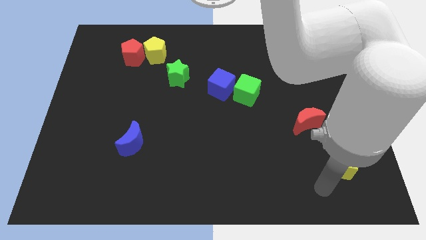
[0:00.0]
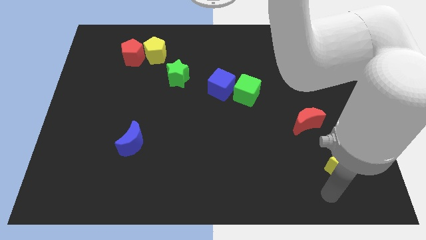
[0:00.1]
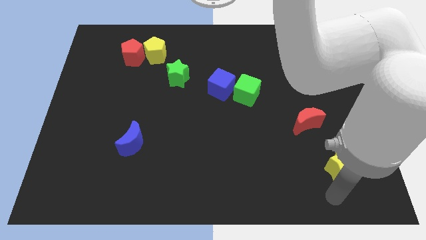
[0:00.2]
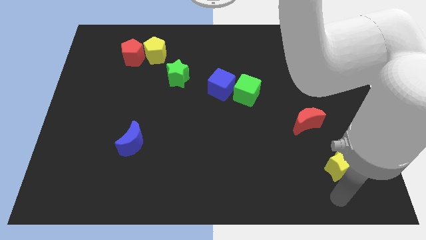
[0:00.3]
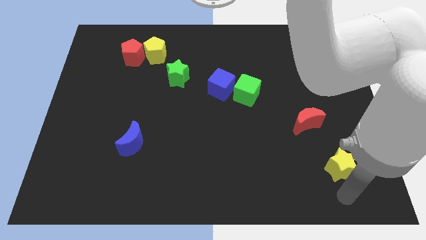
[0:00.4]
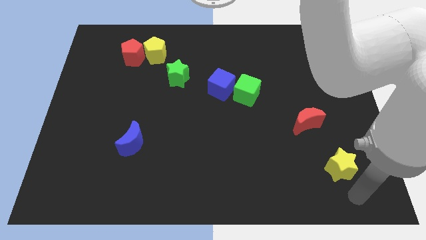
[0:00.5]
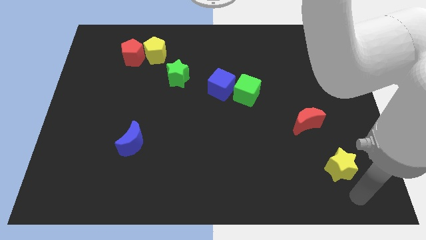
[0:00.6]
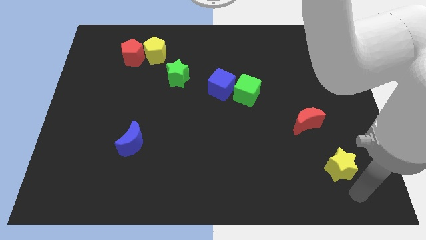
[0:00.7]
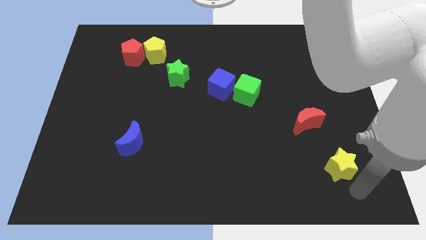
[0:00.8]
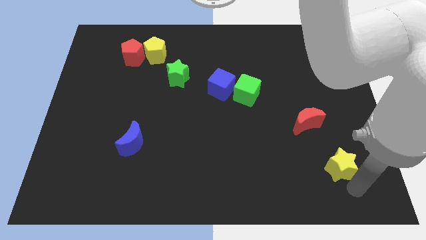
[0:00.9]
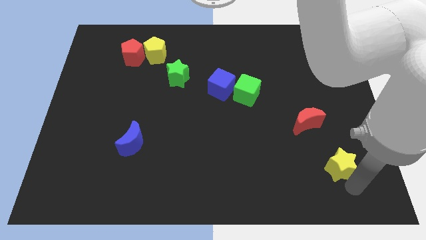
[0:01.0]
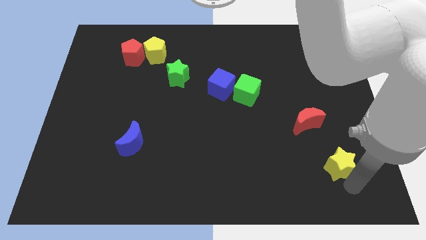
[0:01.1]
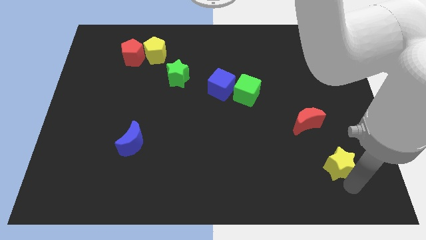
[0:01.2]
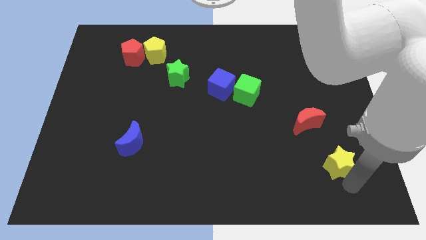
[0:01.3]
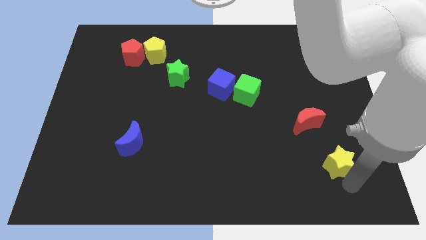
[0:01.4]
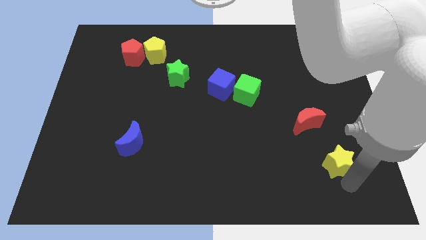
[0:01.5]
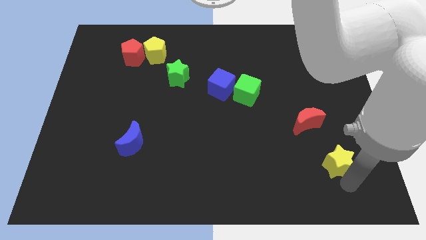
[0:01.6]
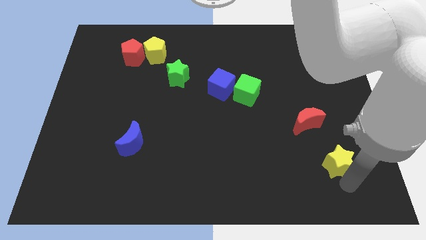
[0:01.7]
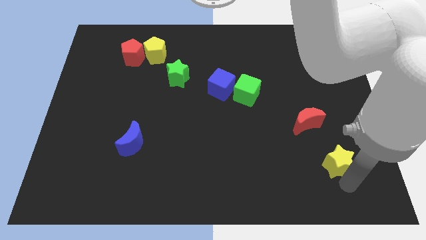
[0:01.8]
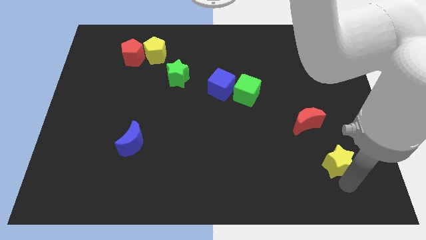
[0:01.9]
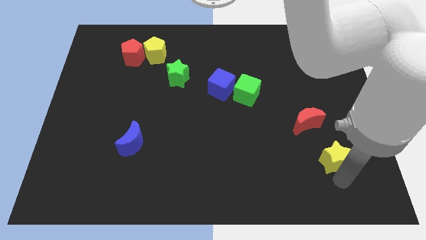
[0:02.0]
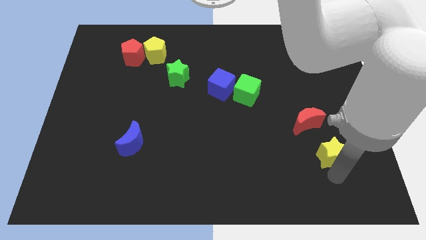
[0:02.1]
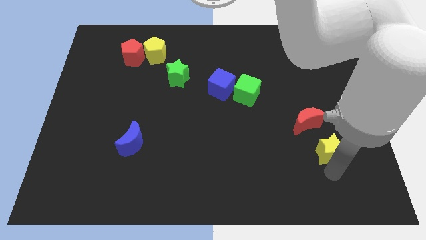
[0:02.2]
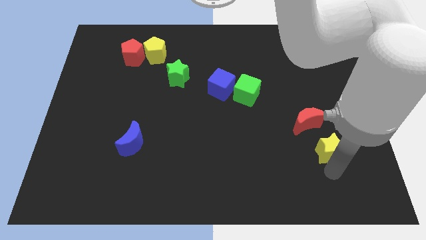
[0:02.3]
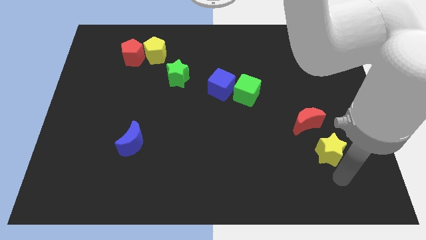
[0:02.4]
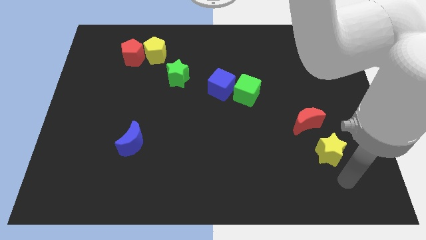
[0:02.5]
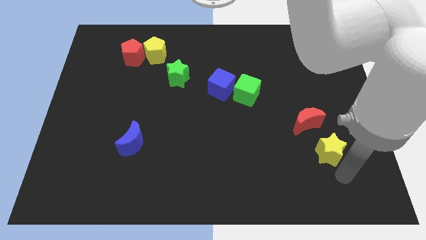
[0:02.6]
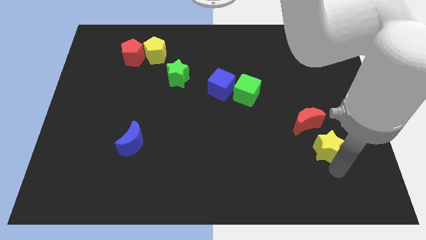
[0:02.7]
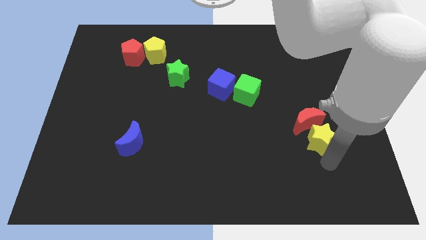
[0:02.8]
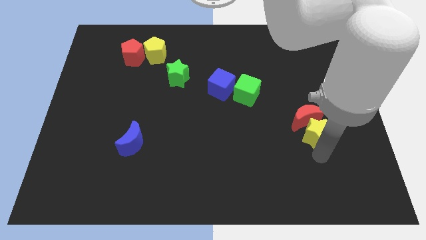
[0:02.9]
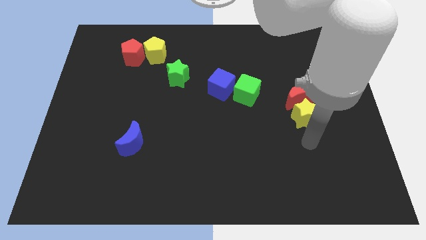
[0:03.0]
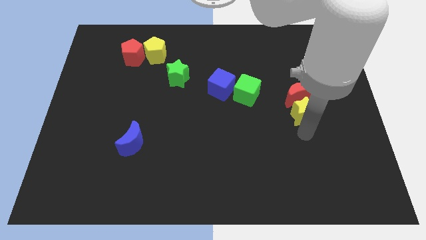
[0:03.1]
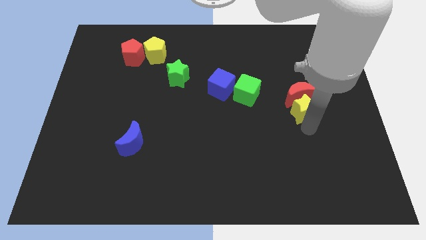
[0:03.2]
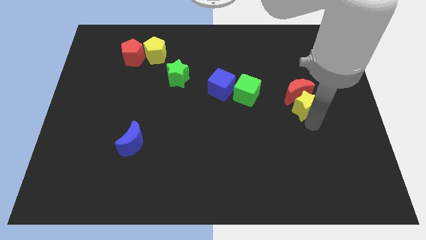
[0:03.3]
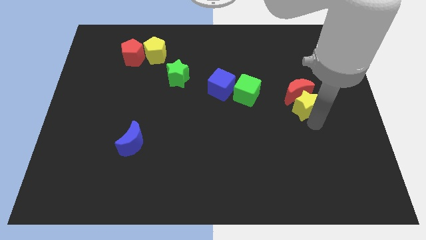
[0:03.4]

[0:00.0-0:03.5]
push the yellow star into red moon at the bottom

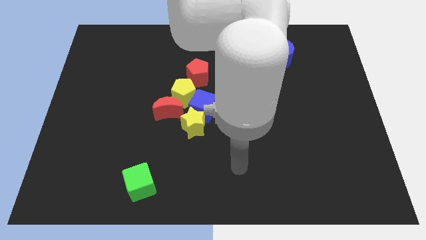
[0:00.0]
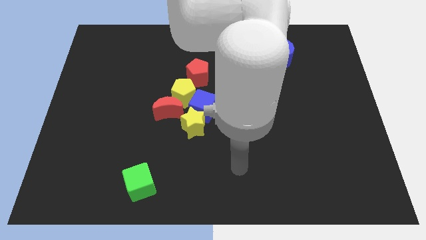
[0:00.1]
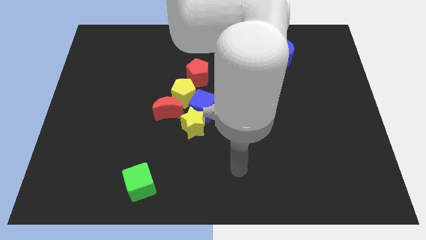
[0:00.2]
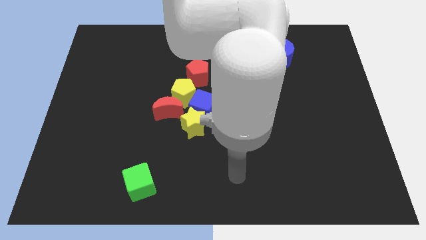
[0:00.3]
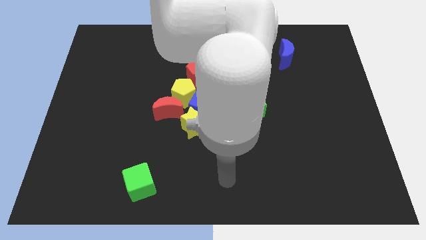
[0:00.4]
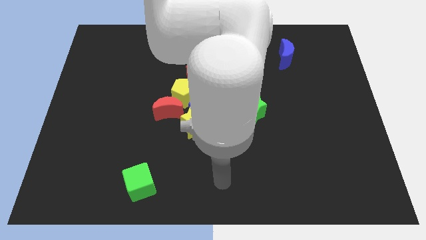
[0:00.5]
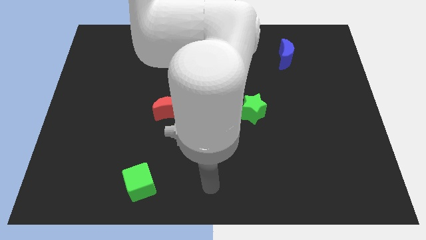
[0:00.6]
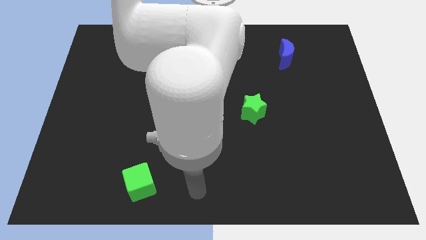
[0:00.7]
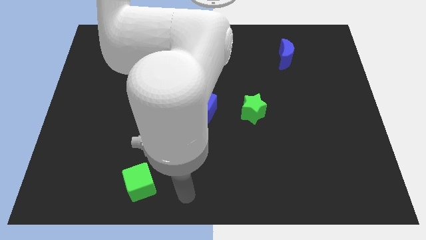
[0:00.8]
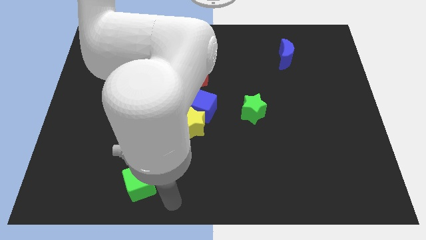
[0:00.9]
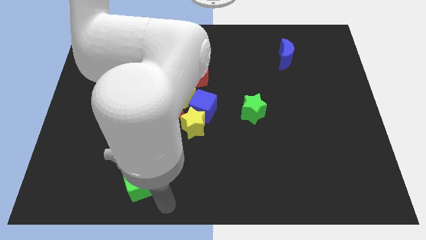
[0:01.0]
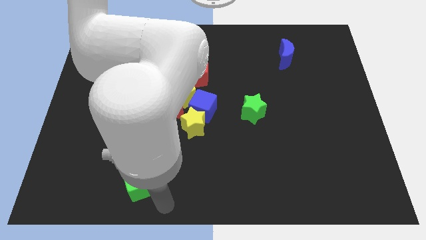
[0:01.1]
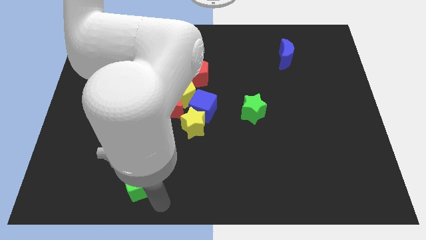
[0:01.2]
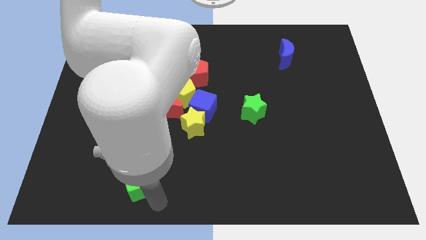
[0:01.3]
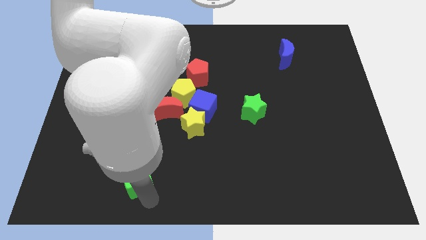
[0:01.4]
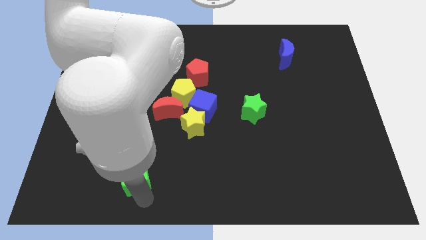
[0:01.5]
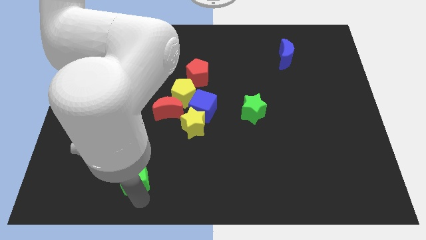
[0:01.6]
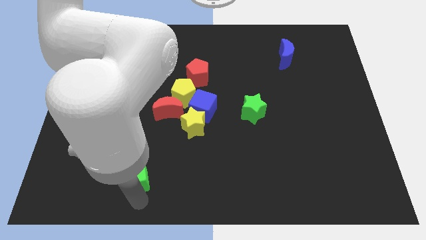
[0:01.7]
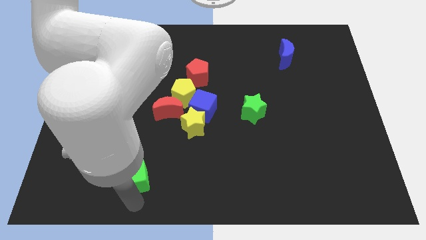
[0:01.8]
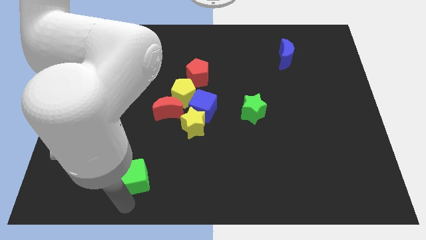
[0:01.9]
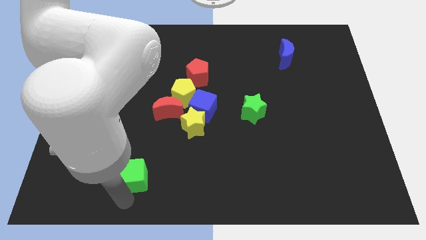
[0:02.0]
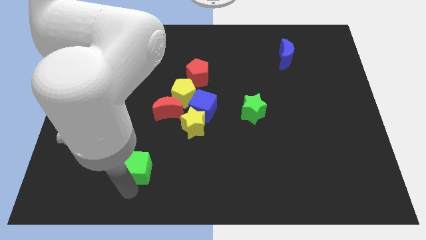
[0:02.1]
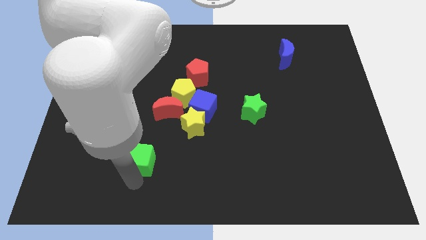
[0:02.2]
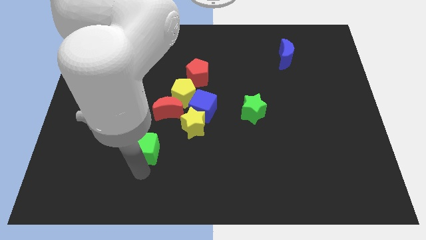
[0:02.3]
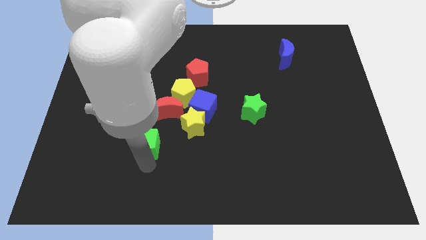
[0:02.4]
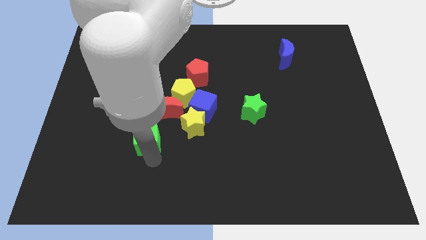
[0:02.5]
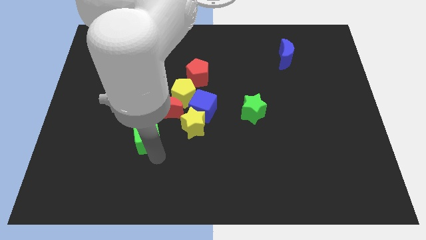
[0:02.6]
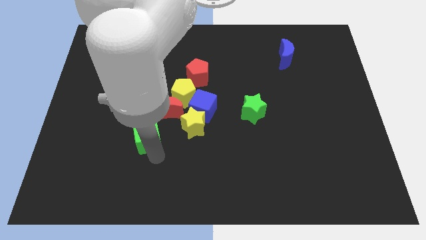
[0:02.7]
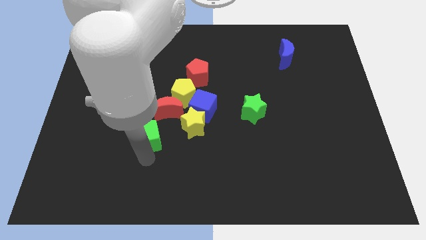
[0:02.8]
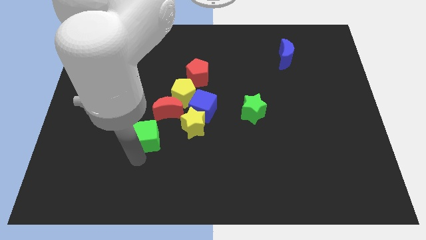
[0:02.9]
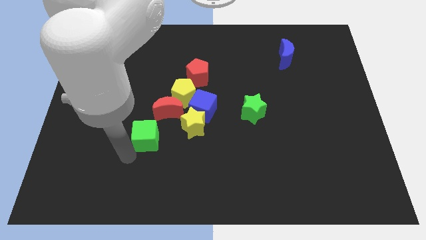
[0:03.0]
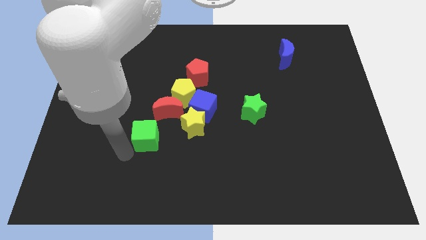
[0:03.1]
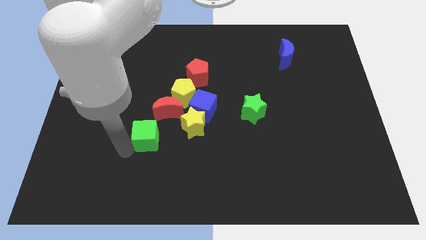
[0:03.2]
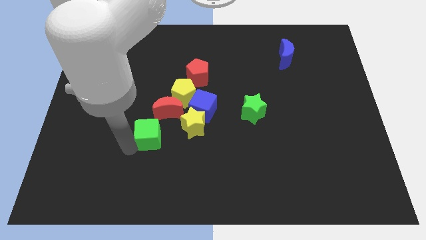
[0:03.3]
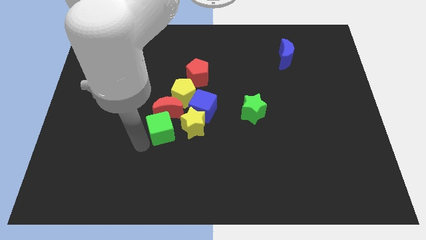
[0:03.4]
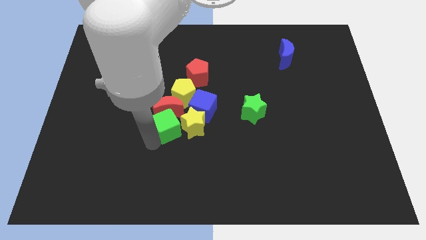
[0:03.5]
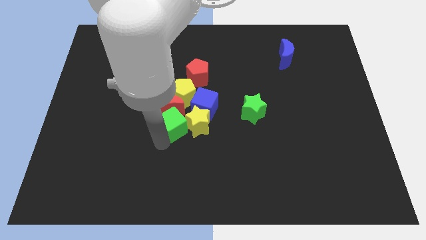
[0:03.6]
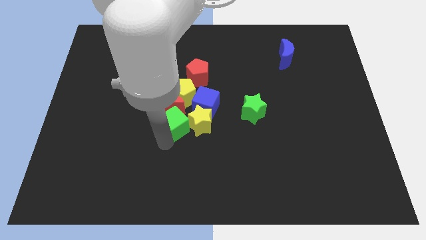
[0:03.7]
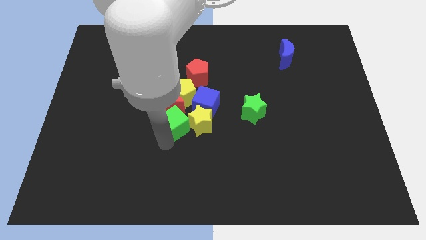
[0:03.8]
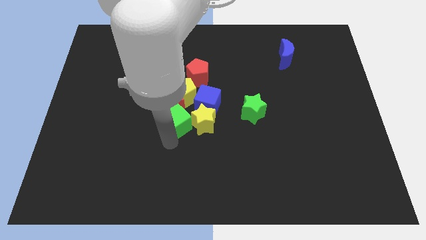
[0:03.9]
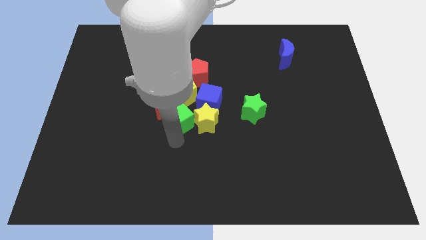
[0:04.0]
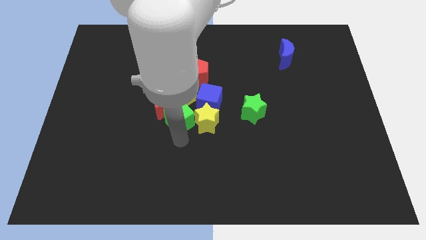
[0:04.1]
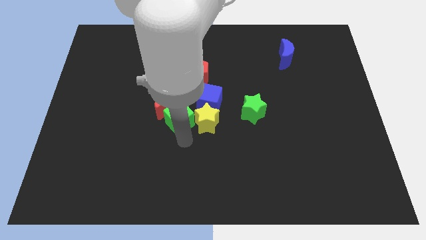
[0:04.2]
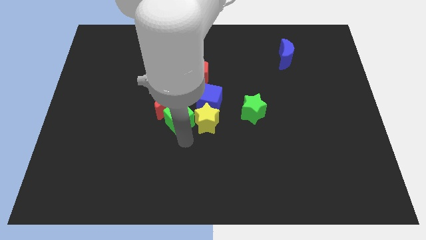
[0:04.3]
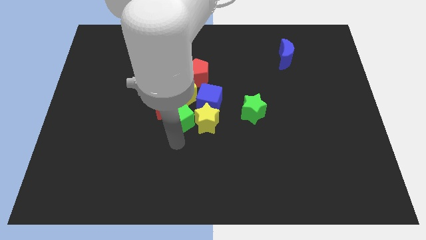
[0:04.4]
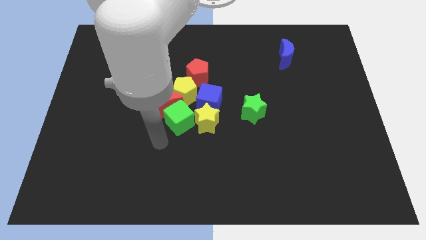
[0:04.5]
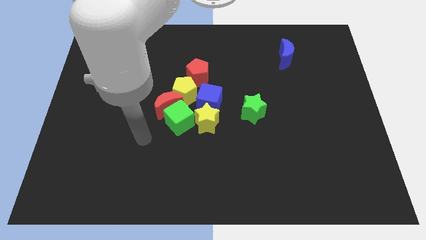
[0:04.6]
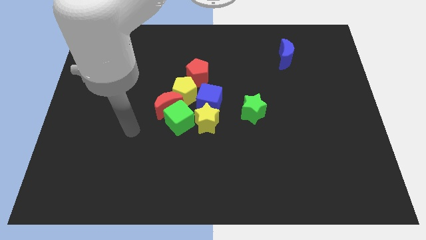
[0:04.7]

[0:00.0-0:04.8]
move the green cube into the group of blocks

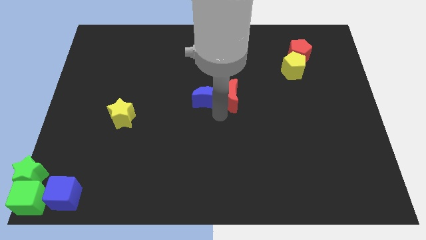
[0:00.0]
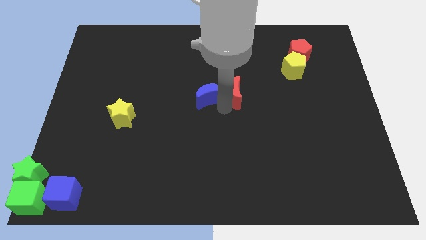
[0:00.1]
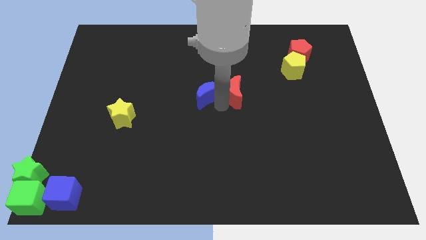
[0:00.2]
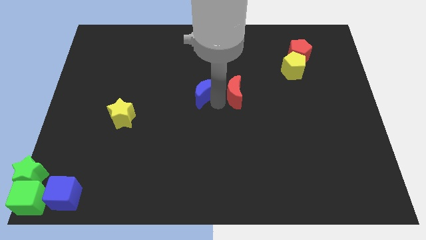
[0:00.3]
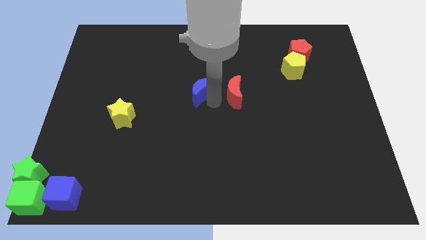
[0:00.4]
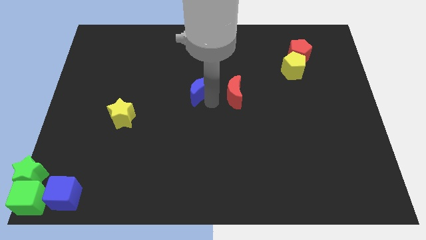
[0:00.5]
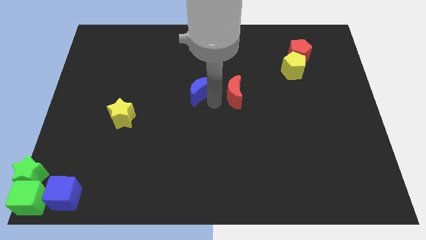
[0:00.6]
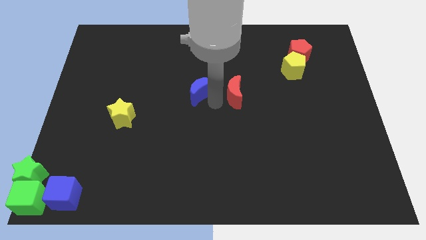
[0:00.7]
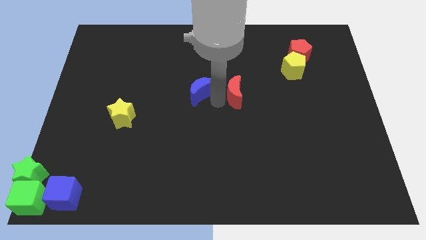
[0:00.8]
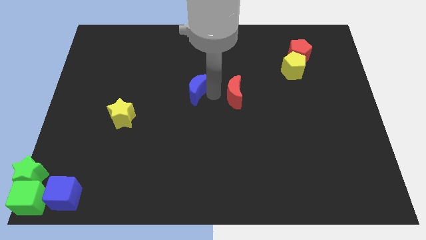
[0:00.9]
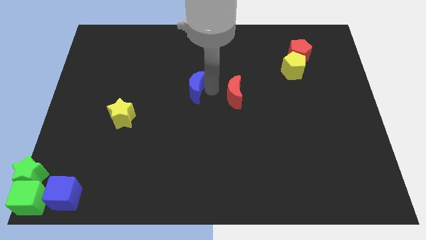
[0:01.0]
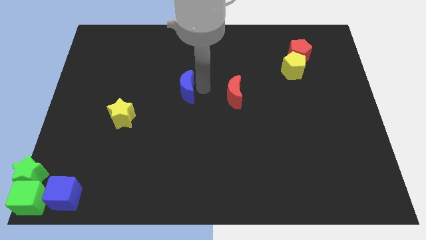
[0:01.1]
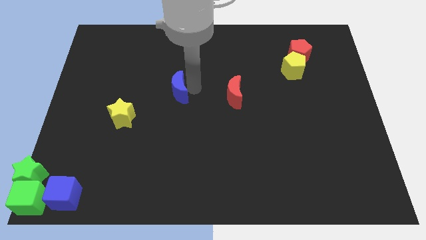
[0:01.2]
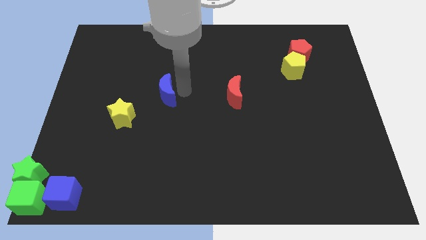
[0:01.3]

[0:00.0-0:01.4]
separate the blue and red crescents
